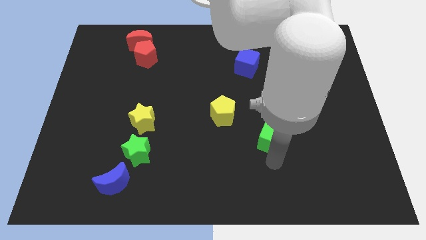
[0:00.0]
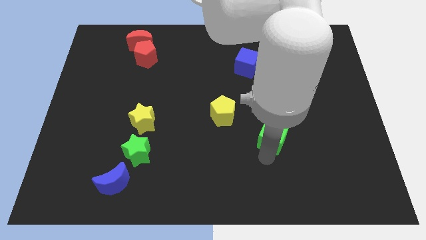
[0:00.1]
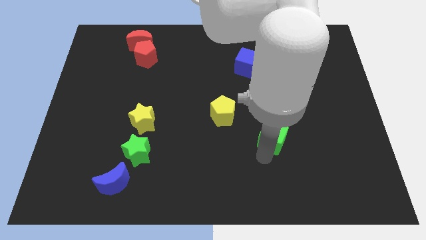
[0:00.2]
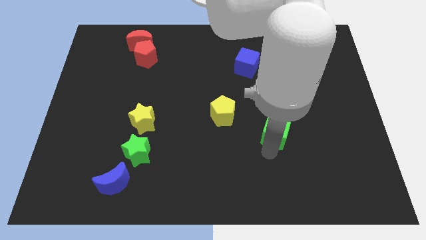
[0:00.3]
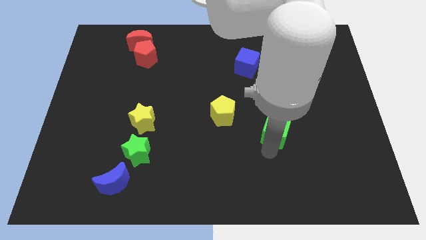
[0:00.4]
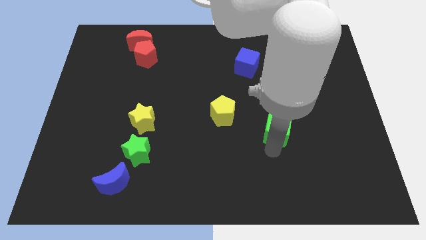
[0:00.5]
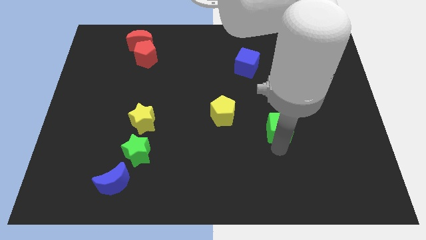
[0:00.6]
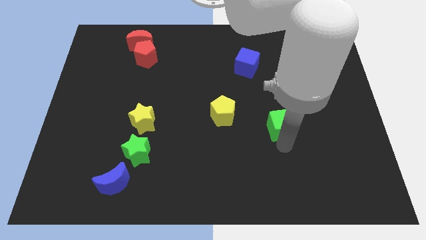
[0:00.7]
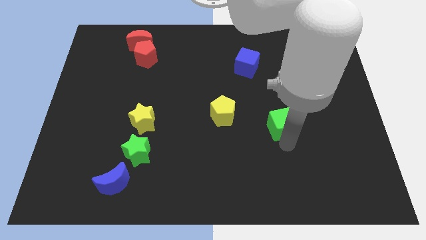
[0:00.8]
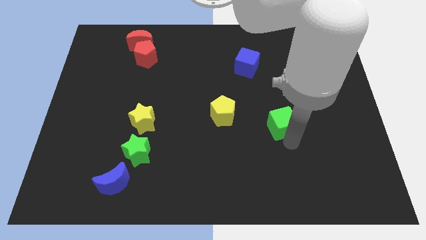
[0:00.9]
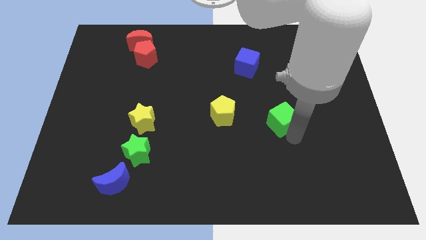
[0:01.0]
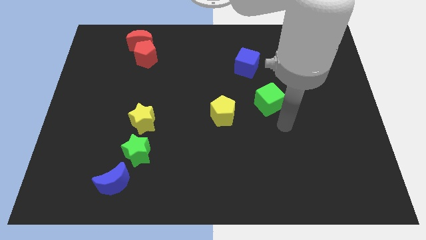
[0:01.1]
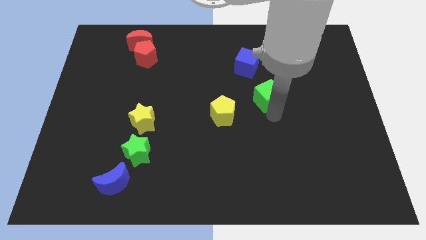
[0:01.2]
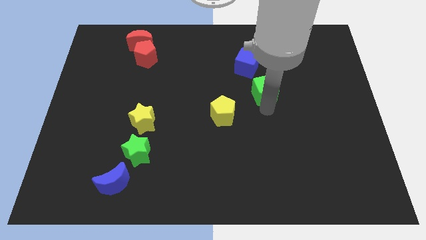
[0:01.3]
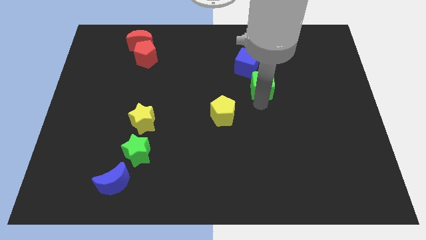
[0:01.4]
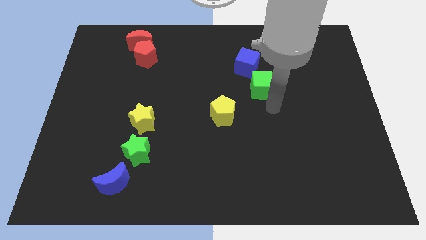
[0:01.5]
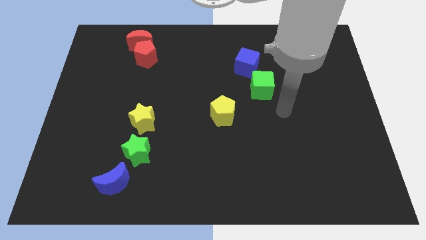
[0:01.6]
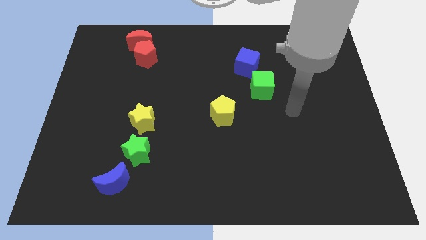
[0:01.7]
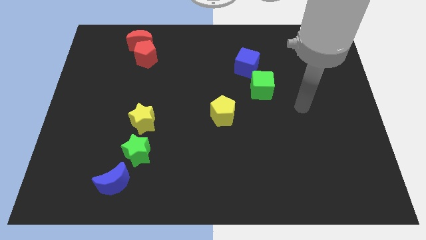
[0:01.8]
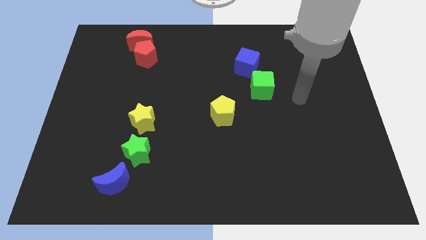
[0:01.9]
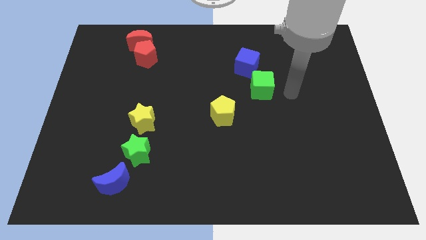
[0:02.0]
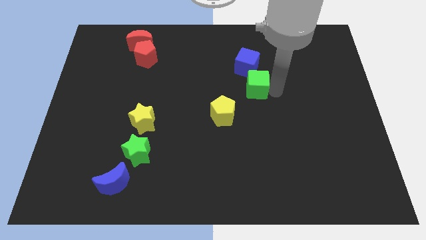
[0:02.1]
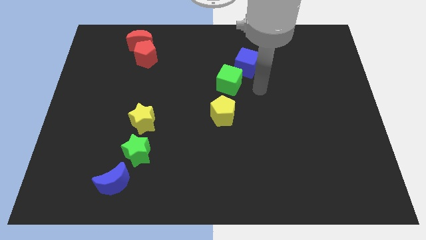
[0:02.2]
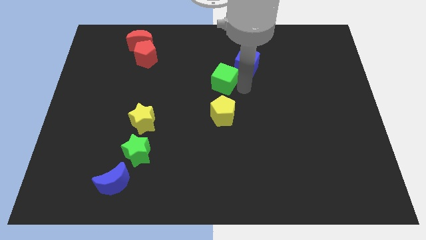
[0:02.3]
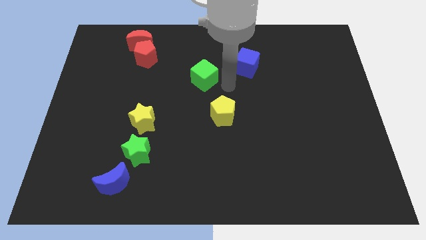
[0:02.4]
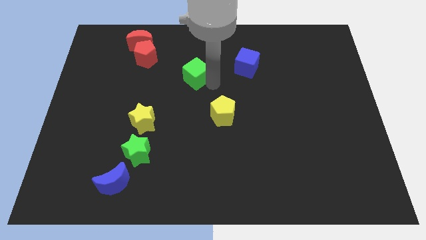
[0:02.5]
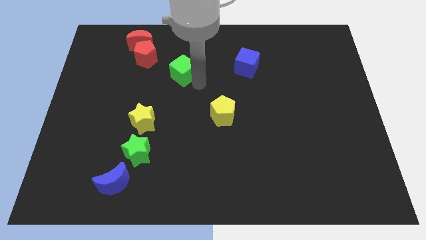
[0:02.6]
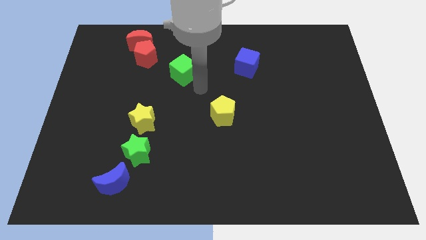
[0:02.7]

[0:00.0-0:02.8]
push the green cube to the top left of the yellow pentagon

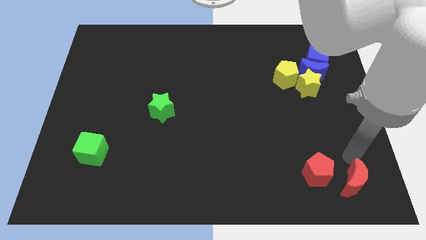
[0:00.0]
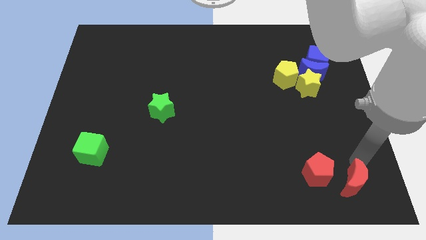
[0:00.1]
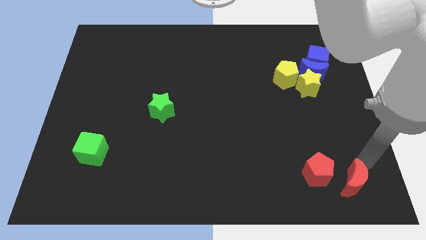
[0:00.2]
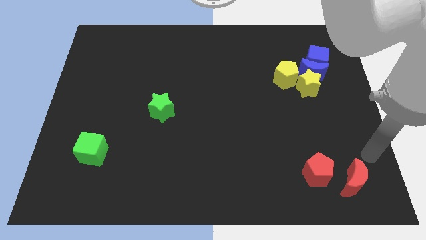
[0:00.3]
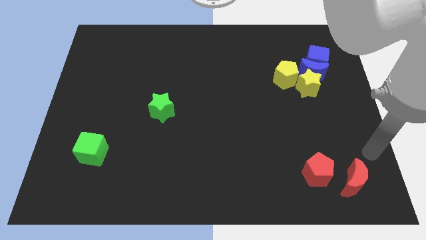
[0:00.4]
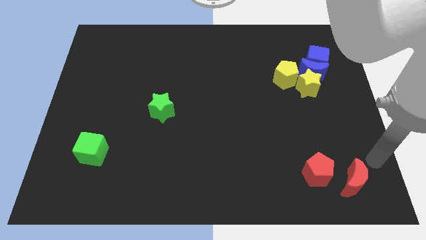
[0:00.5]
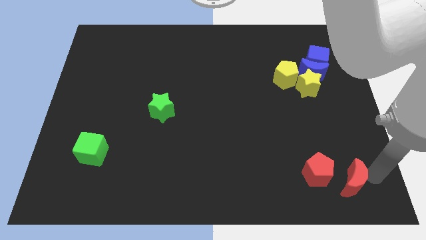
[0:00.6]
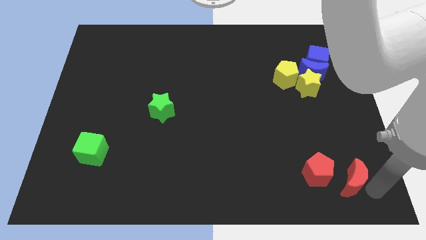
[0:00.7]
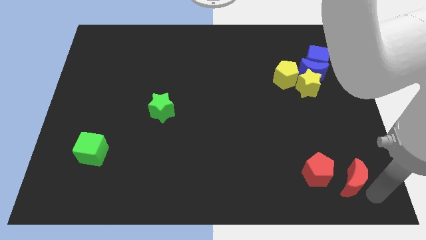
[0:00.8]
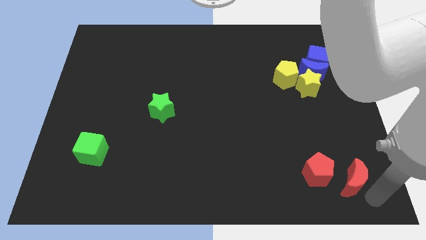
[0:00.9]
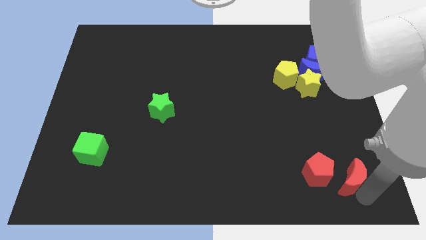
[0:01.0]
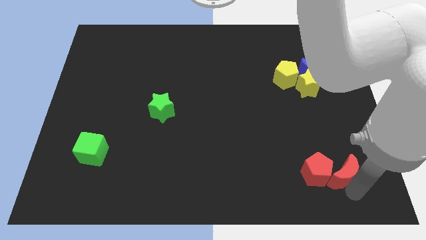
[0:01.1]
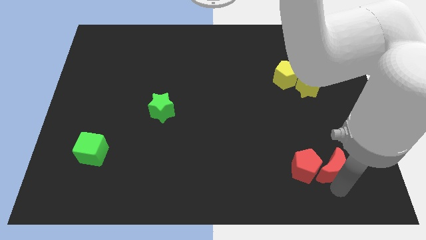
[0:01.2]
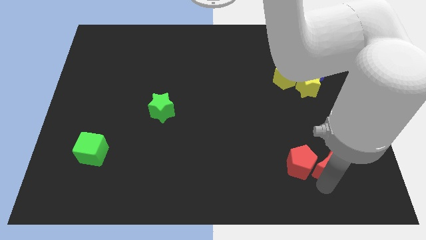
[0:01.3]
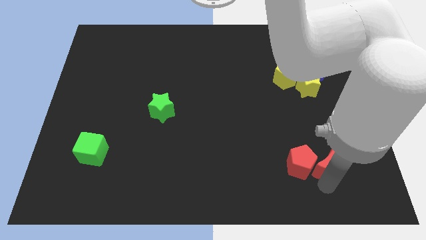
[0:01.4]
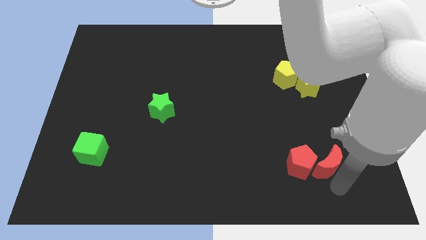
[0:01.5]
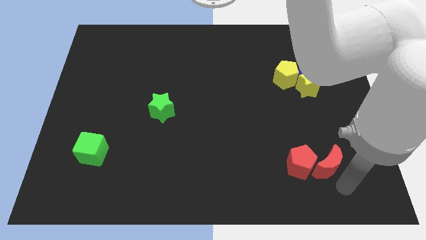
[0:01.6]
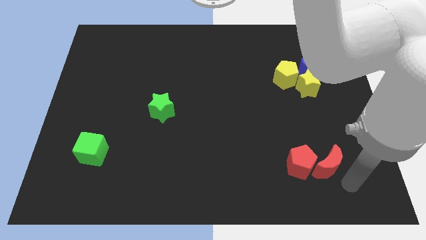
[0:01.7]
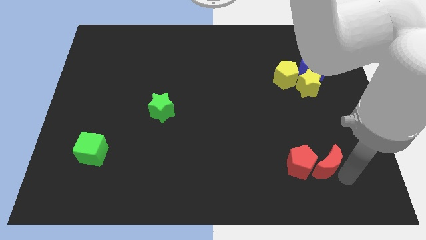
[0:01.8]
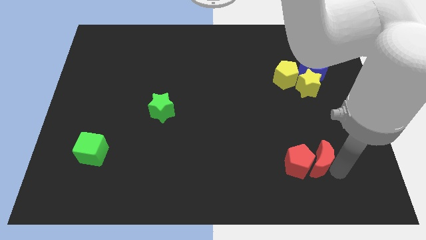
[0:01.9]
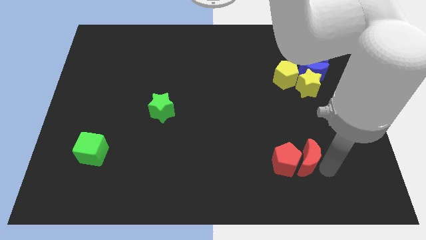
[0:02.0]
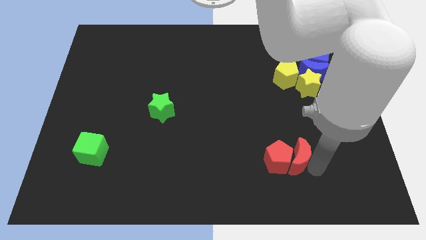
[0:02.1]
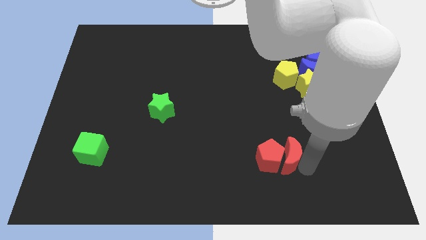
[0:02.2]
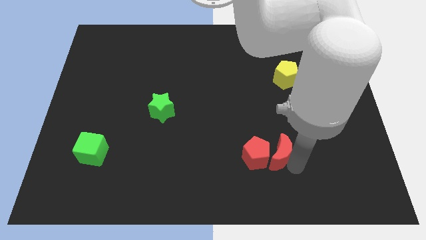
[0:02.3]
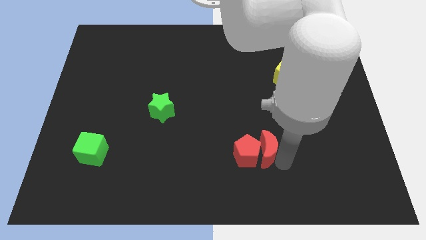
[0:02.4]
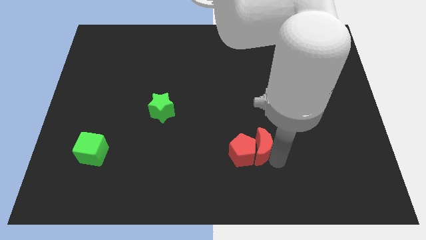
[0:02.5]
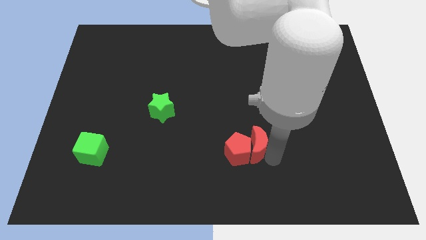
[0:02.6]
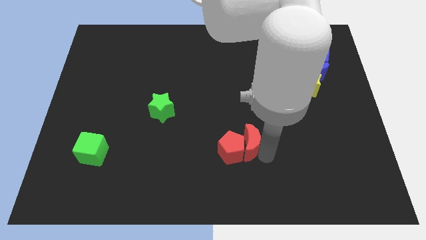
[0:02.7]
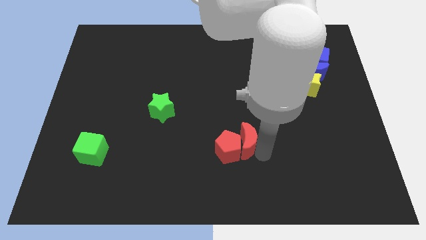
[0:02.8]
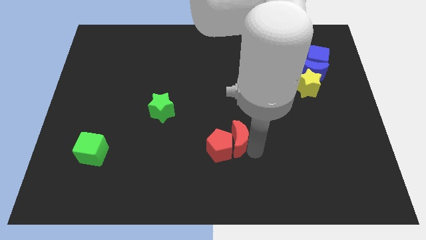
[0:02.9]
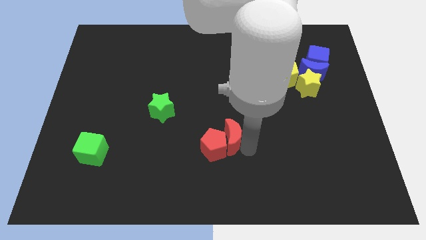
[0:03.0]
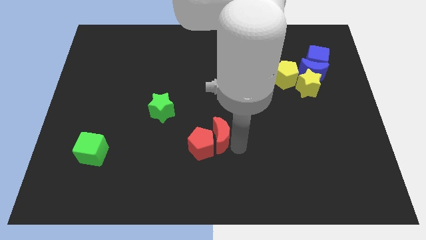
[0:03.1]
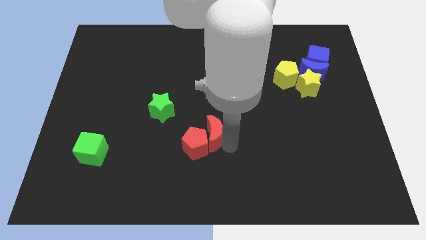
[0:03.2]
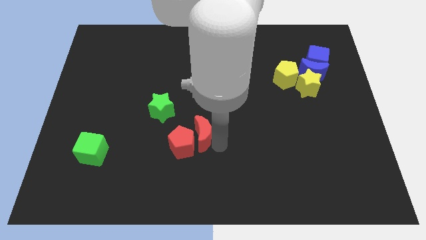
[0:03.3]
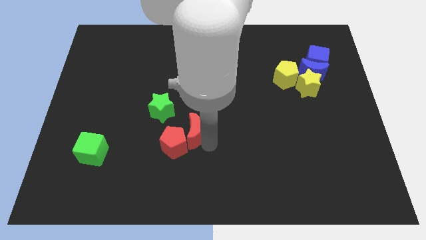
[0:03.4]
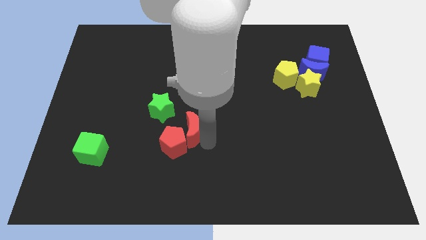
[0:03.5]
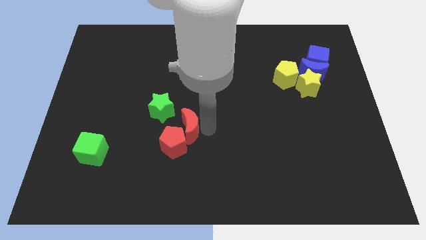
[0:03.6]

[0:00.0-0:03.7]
push the red crescent along with red pentagon towards green star

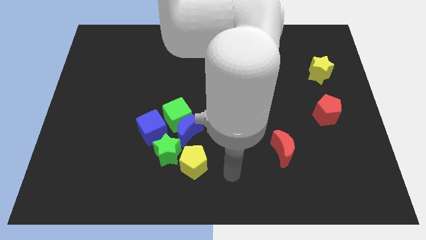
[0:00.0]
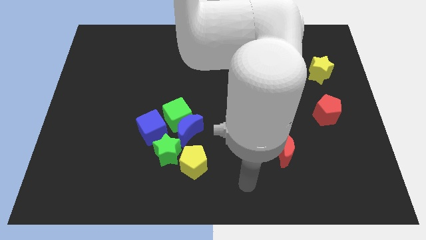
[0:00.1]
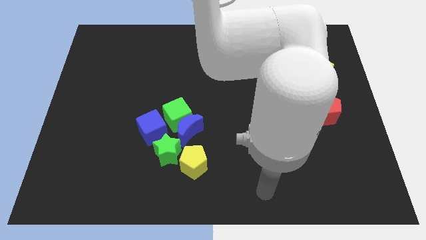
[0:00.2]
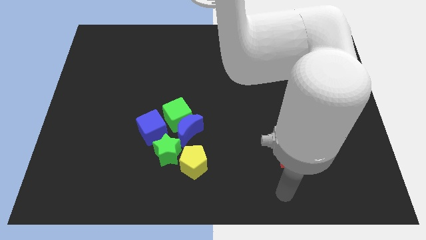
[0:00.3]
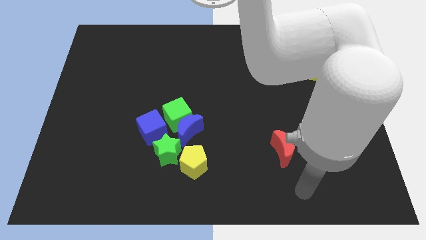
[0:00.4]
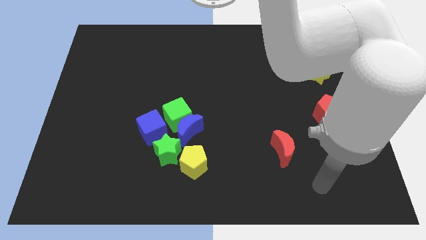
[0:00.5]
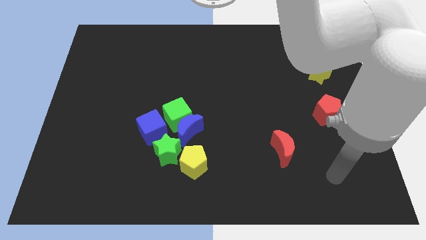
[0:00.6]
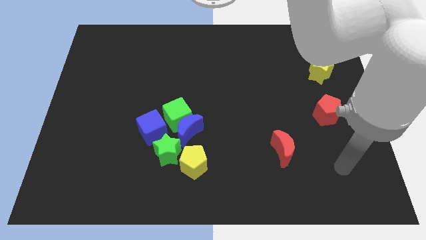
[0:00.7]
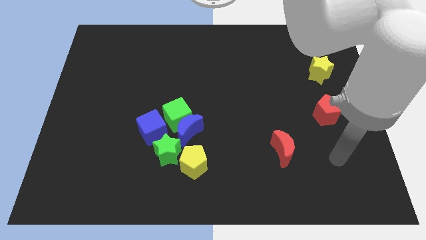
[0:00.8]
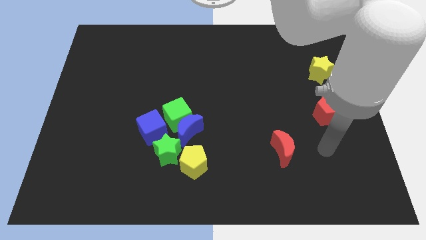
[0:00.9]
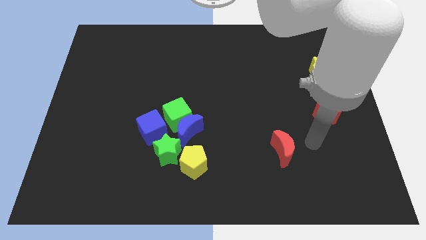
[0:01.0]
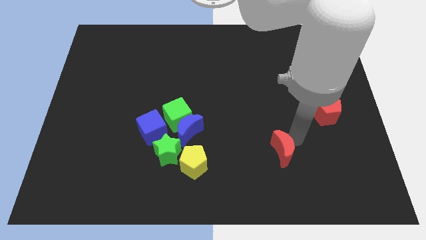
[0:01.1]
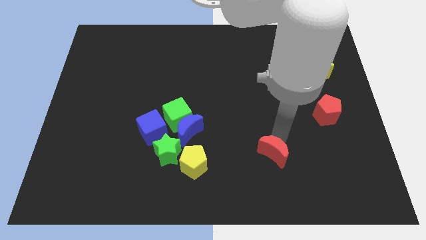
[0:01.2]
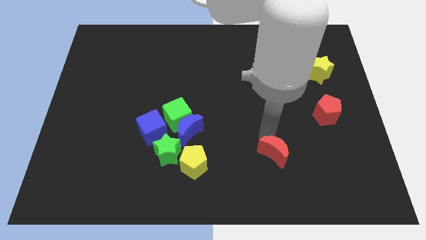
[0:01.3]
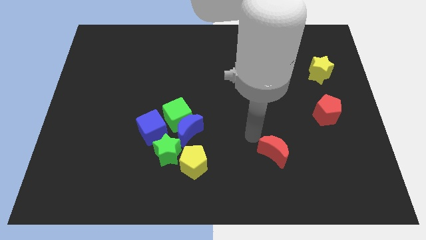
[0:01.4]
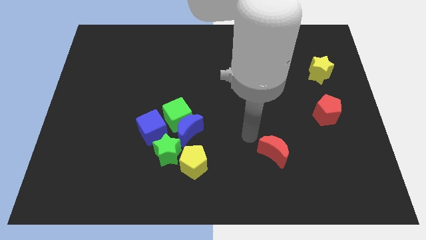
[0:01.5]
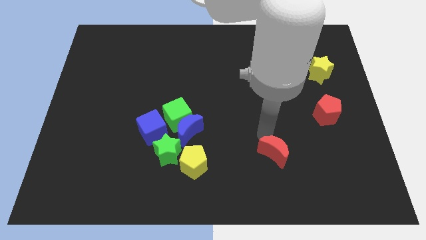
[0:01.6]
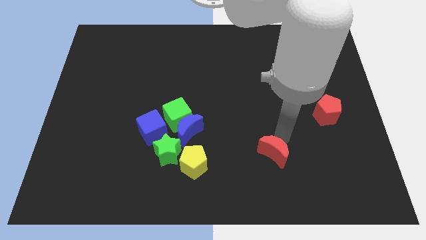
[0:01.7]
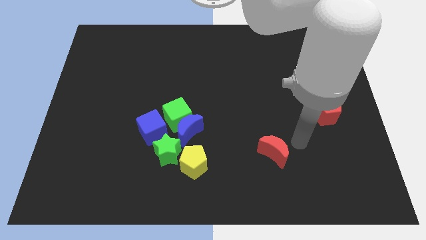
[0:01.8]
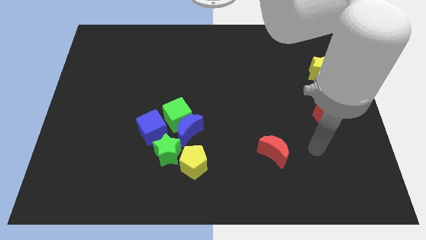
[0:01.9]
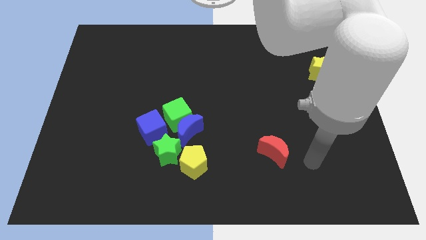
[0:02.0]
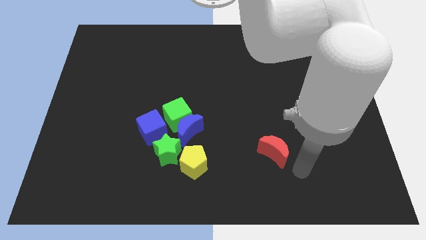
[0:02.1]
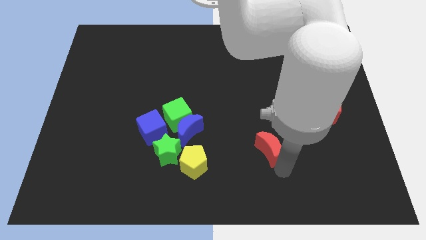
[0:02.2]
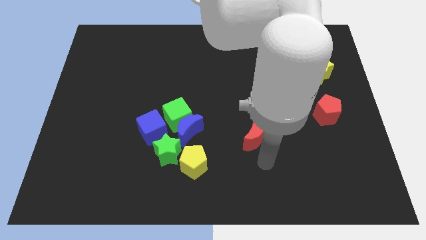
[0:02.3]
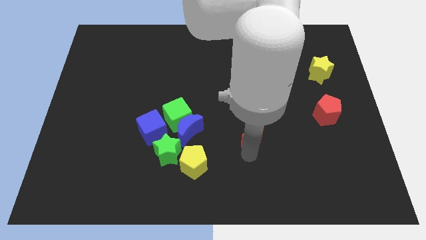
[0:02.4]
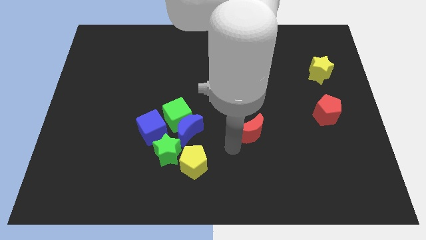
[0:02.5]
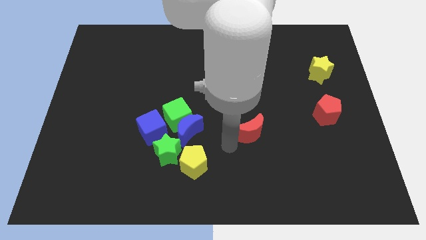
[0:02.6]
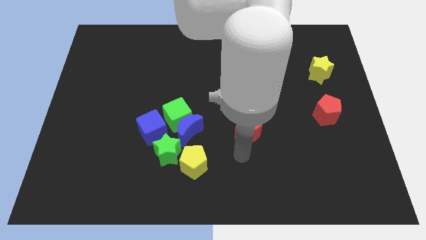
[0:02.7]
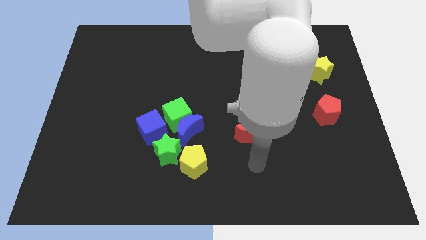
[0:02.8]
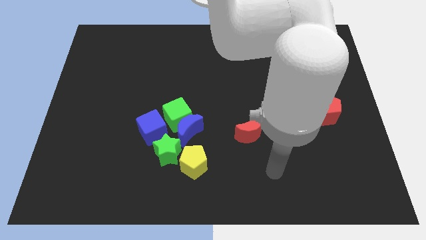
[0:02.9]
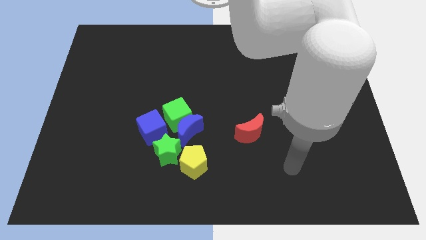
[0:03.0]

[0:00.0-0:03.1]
move red moon to the right of blue moon
